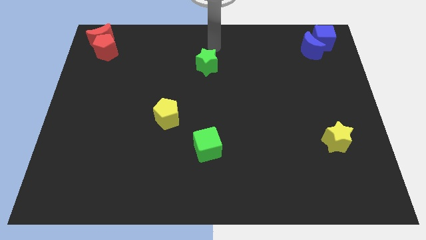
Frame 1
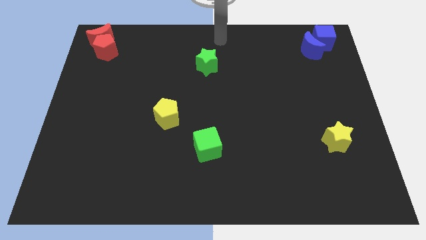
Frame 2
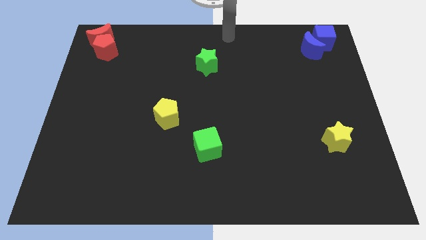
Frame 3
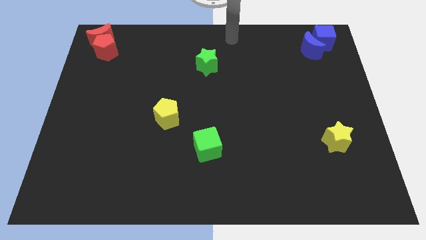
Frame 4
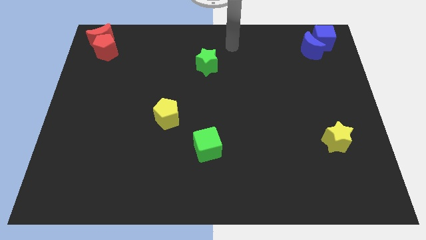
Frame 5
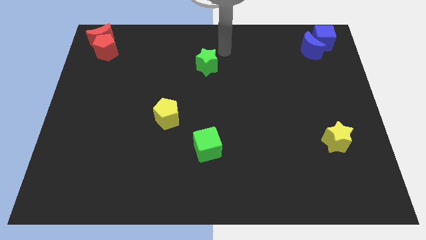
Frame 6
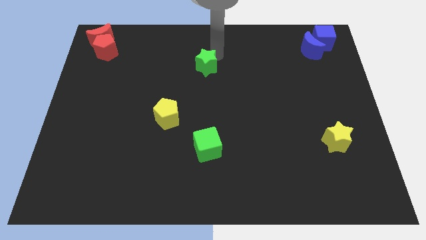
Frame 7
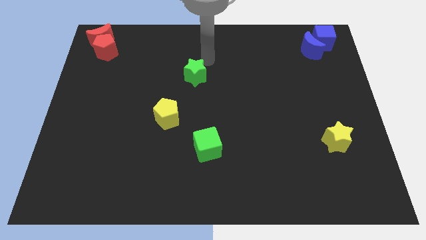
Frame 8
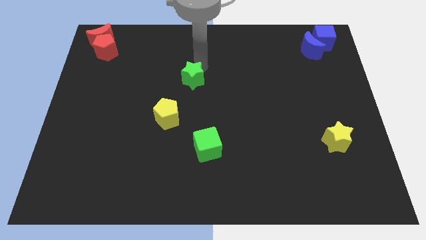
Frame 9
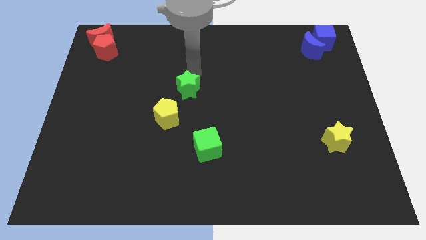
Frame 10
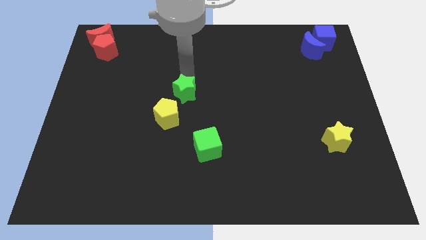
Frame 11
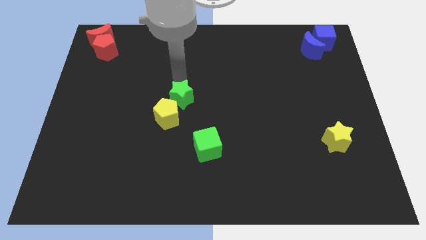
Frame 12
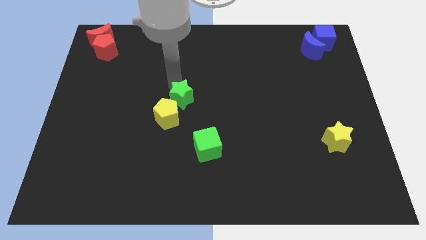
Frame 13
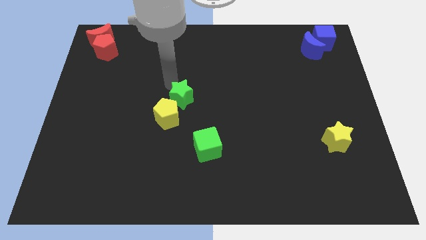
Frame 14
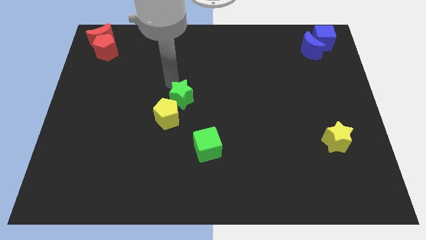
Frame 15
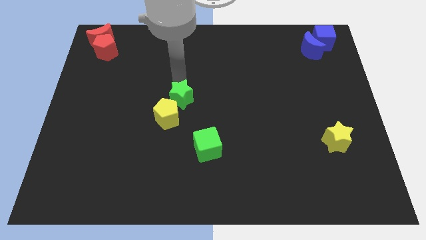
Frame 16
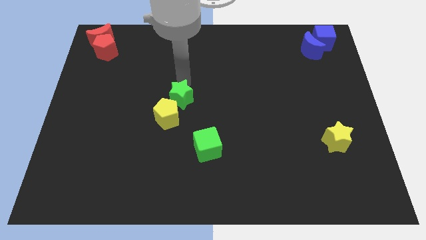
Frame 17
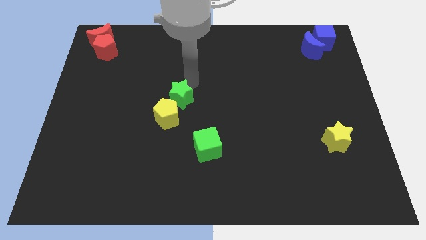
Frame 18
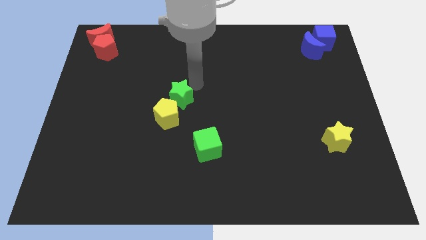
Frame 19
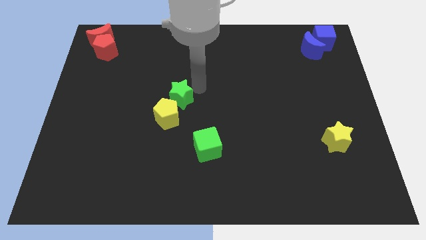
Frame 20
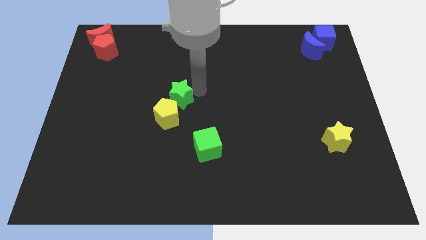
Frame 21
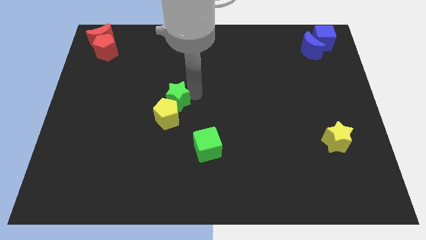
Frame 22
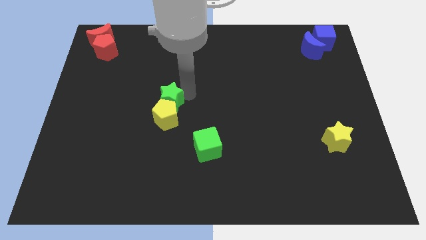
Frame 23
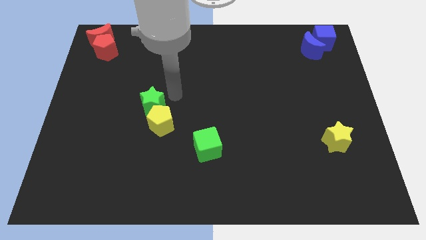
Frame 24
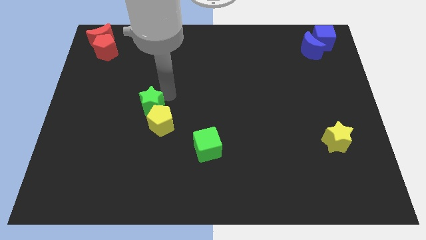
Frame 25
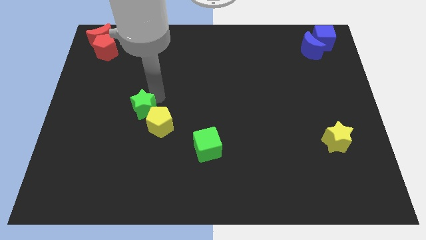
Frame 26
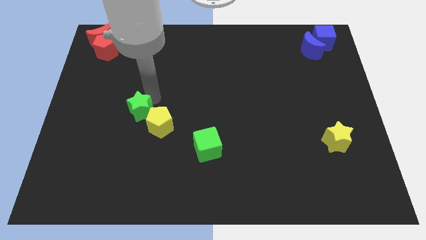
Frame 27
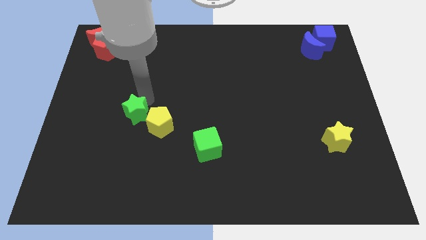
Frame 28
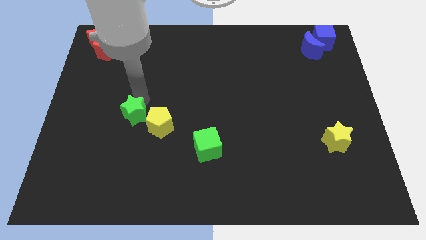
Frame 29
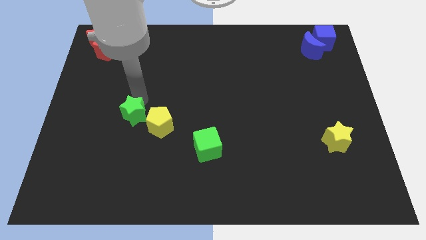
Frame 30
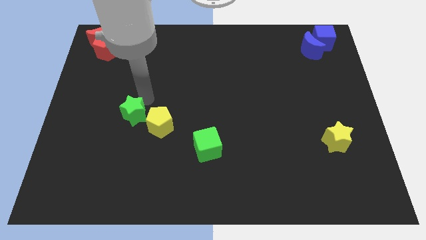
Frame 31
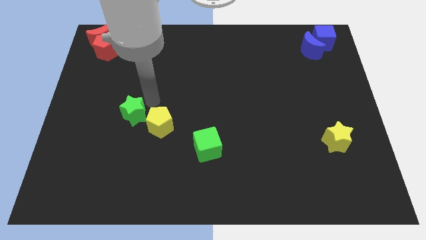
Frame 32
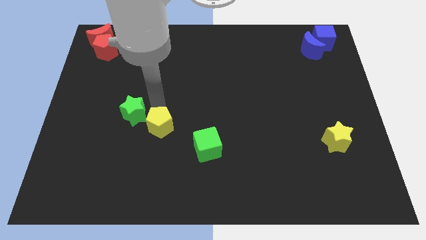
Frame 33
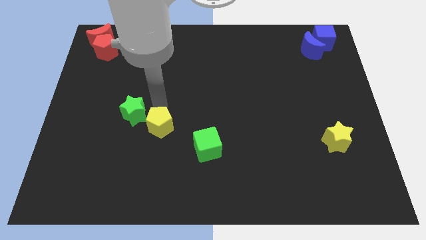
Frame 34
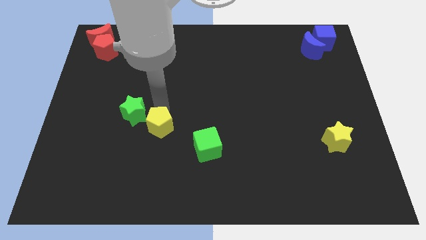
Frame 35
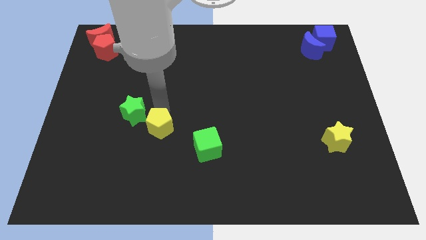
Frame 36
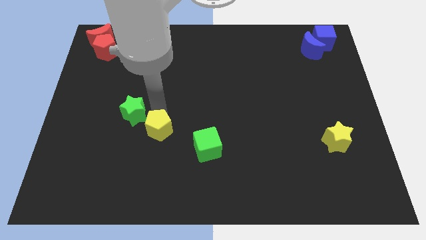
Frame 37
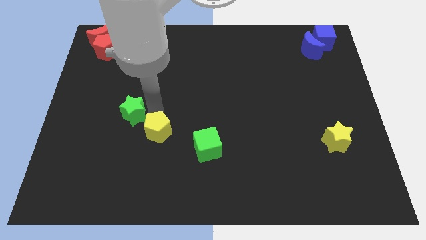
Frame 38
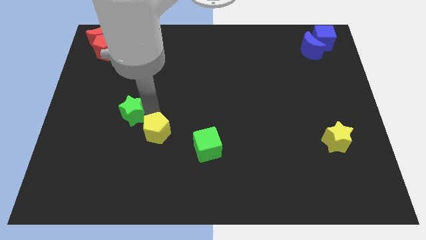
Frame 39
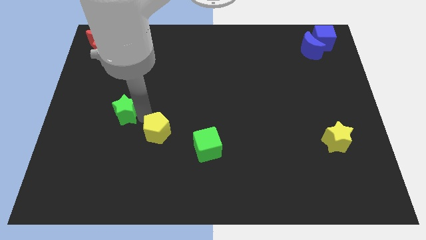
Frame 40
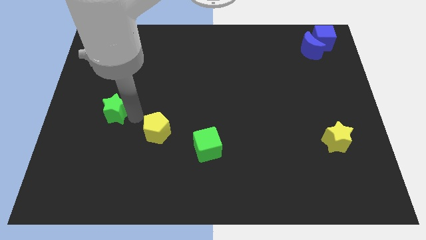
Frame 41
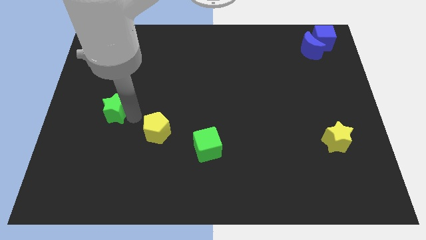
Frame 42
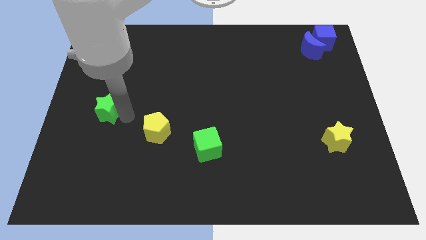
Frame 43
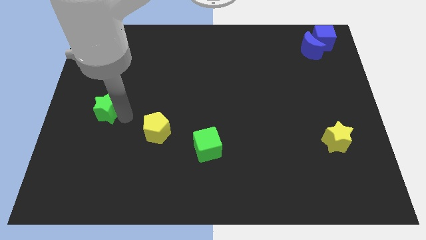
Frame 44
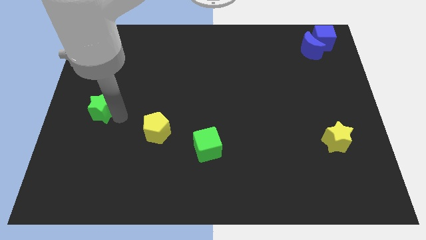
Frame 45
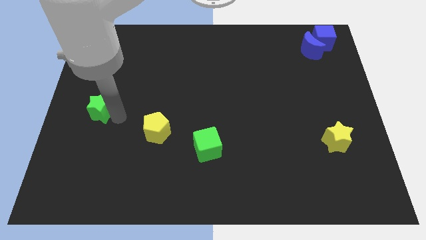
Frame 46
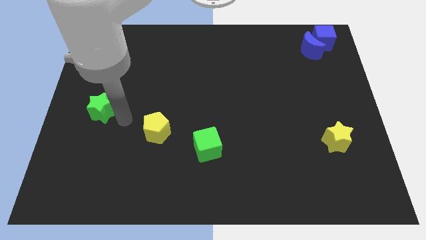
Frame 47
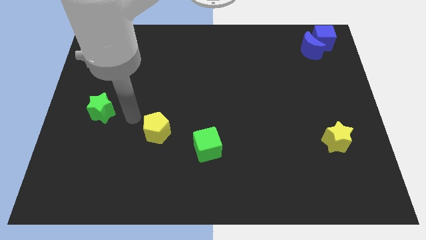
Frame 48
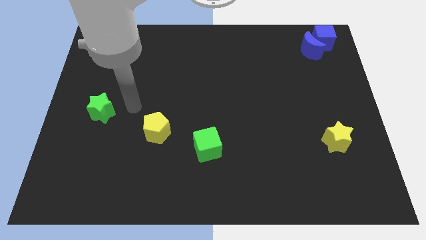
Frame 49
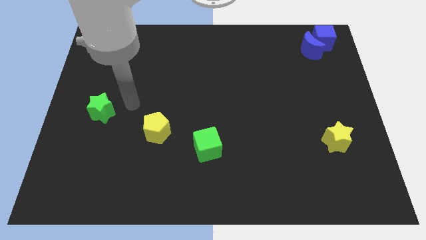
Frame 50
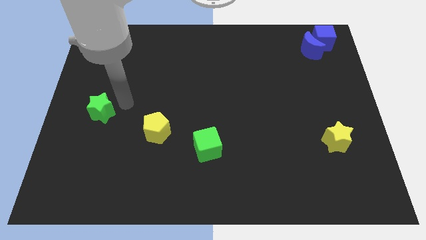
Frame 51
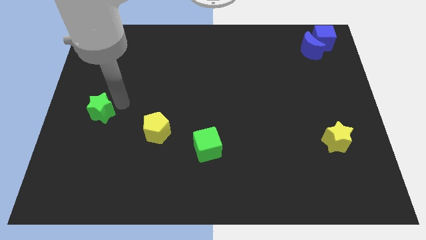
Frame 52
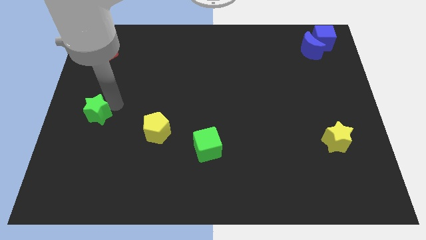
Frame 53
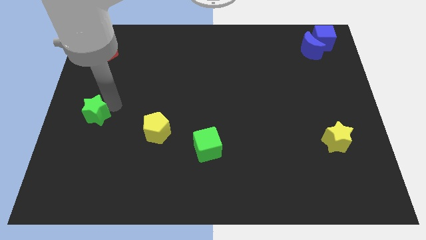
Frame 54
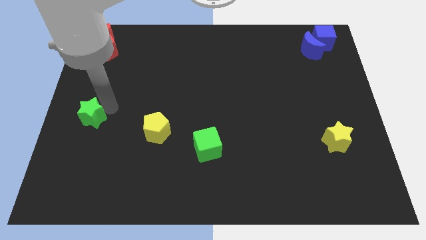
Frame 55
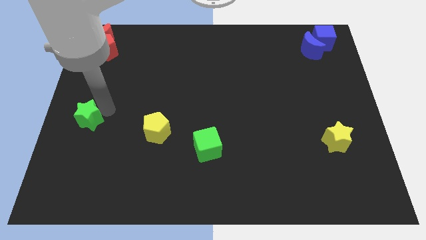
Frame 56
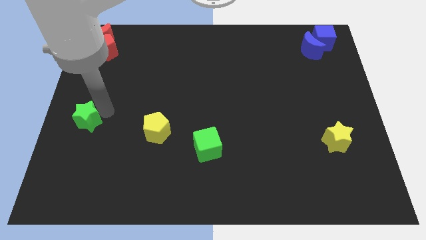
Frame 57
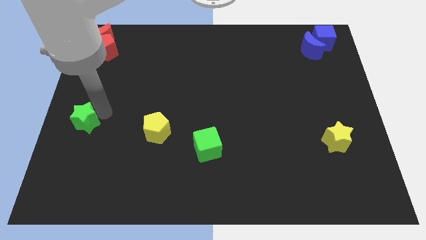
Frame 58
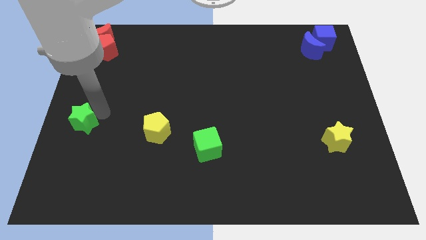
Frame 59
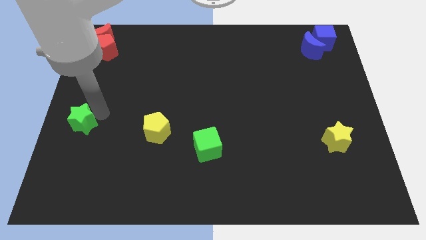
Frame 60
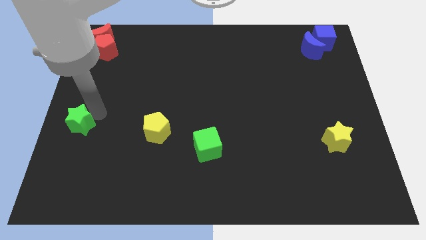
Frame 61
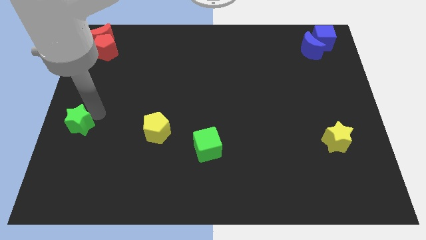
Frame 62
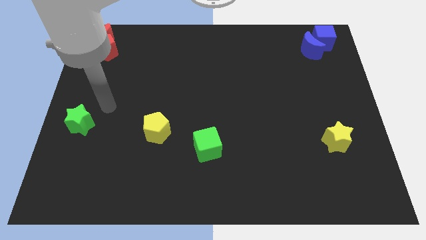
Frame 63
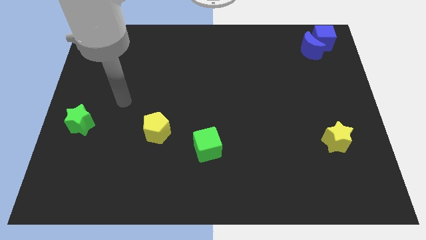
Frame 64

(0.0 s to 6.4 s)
place the green star to the left of the yellow pentagon

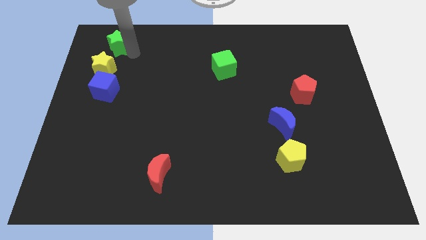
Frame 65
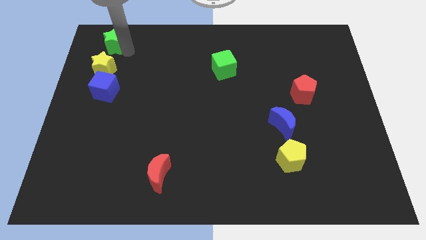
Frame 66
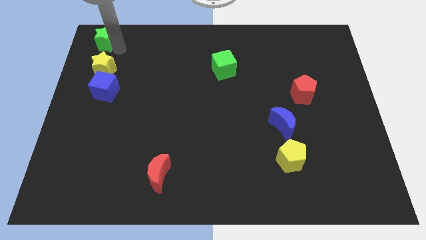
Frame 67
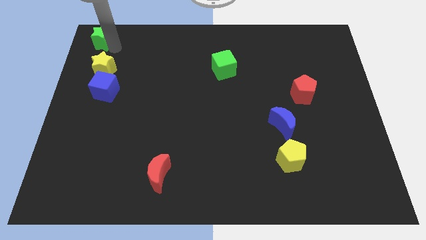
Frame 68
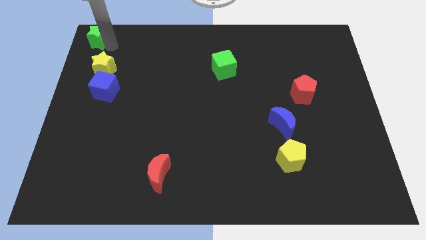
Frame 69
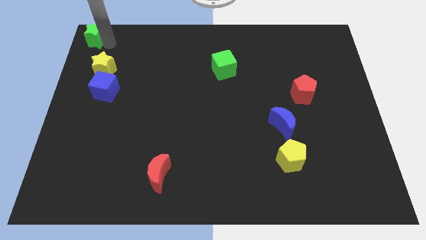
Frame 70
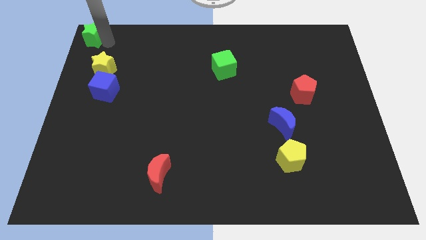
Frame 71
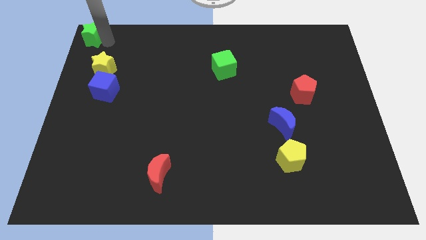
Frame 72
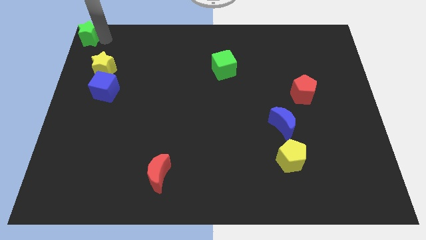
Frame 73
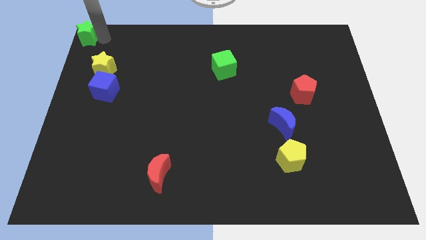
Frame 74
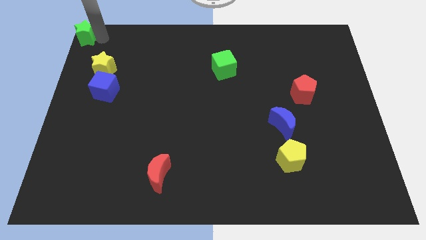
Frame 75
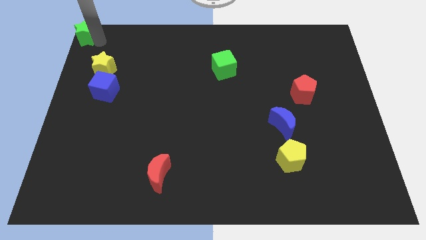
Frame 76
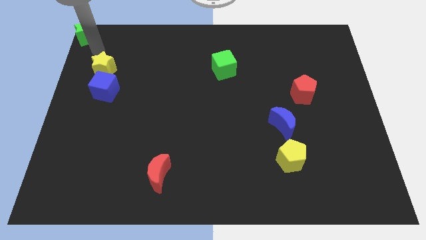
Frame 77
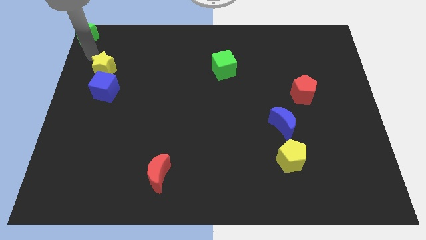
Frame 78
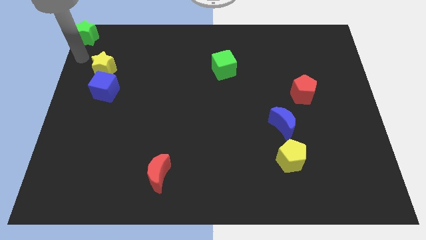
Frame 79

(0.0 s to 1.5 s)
move the green star to the top left

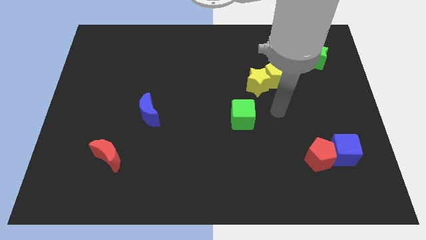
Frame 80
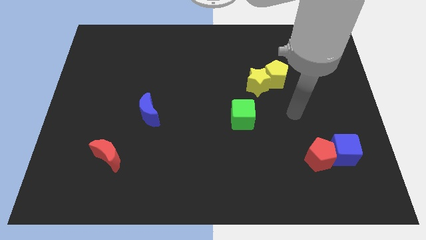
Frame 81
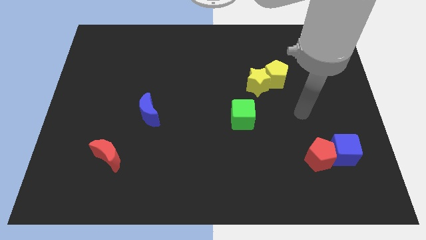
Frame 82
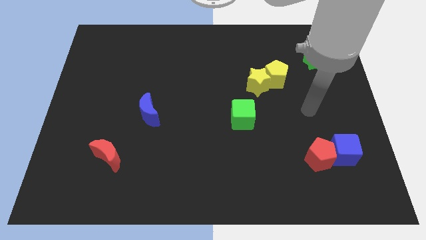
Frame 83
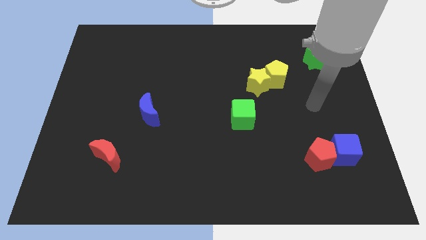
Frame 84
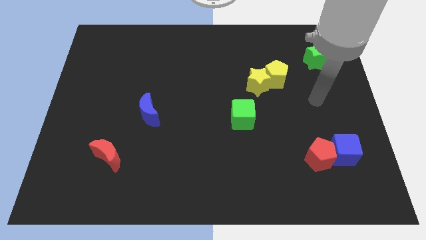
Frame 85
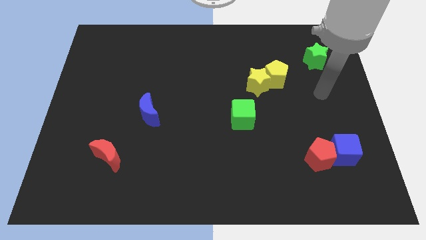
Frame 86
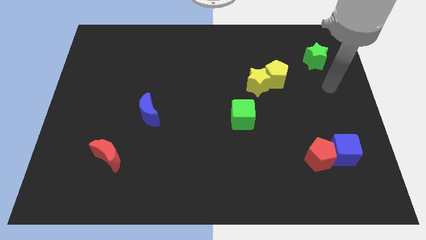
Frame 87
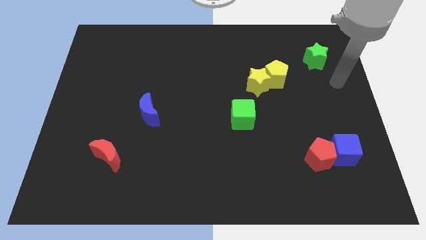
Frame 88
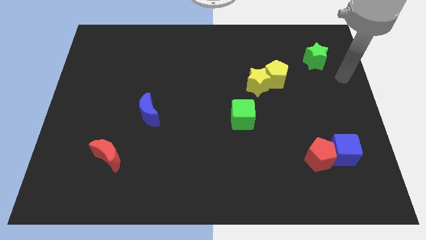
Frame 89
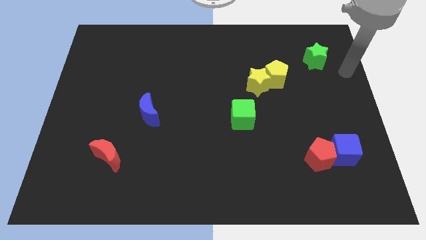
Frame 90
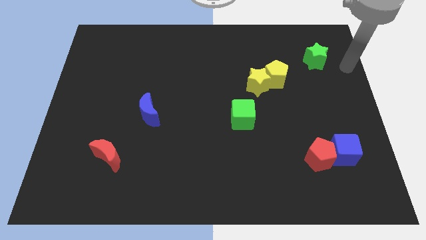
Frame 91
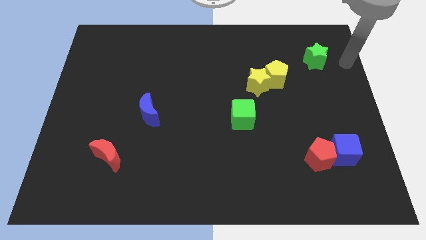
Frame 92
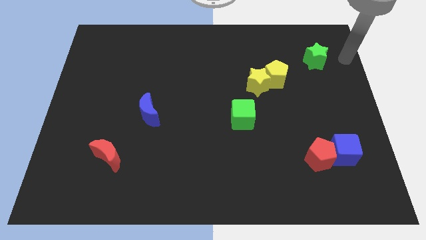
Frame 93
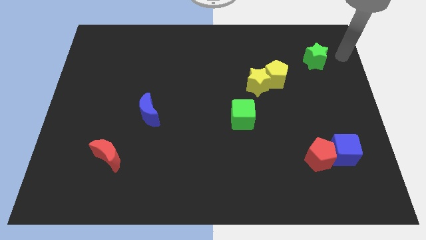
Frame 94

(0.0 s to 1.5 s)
move arm towards the top right
